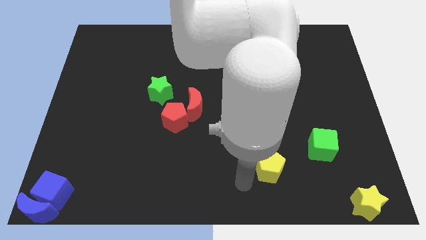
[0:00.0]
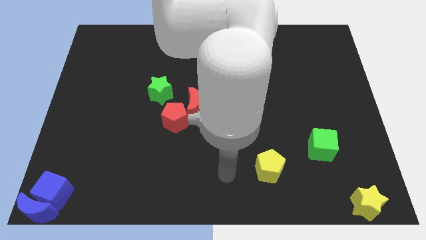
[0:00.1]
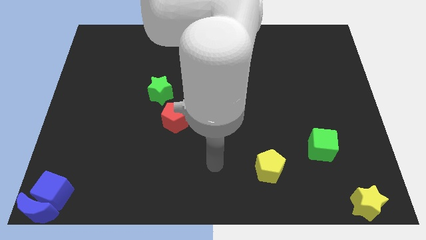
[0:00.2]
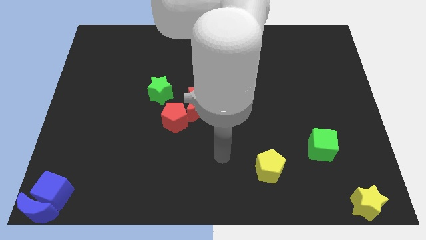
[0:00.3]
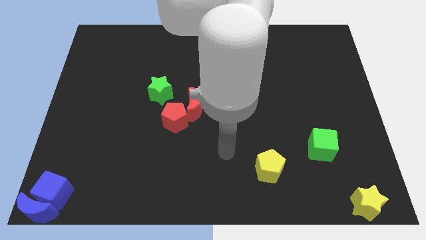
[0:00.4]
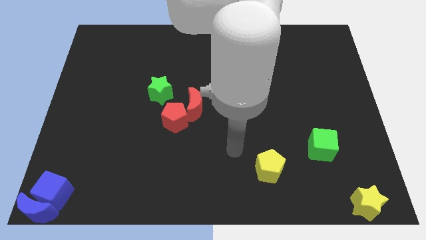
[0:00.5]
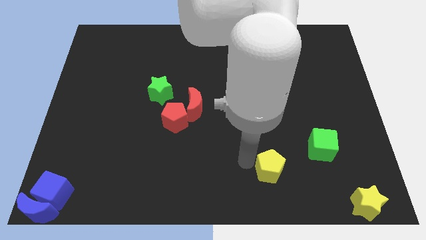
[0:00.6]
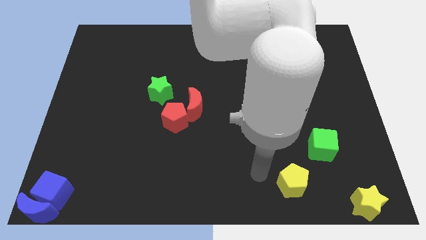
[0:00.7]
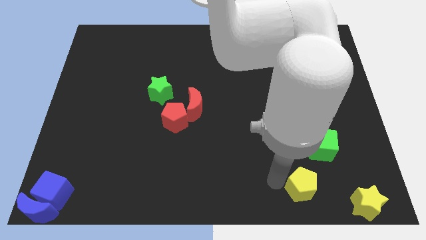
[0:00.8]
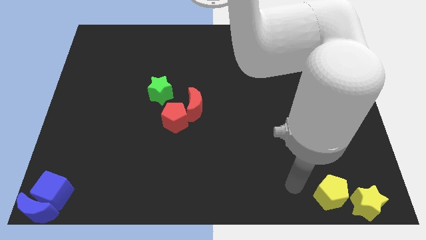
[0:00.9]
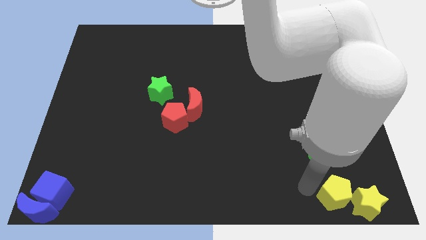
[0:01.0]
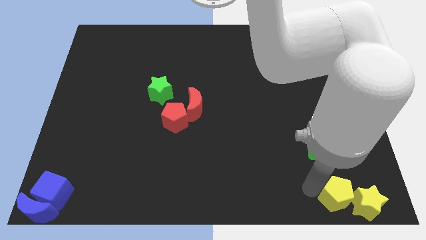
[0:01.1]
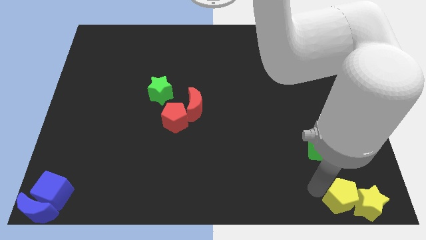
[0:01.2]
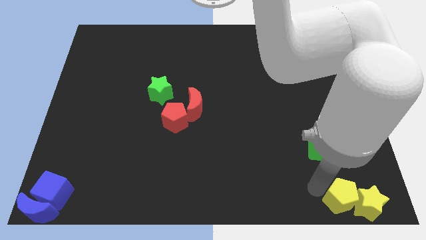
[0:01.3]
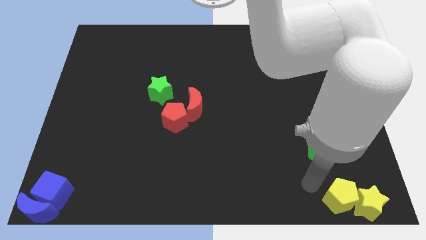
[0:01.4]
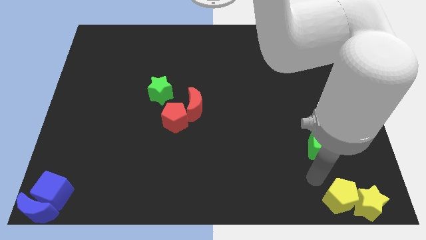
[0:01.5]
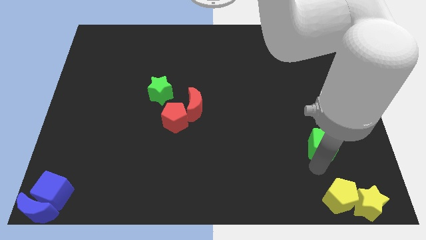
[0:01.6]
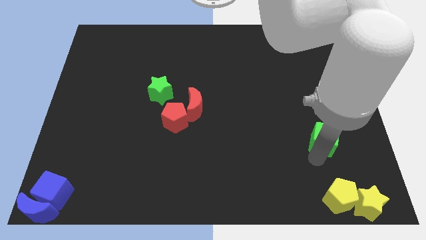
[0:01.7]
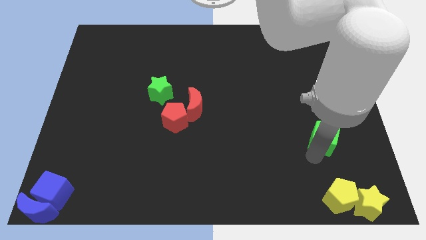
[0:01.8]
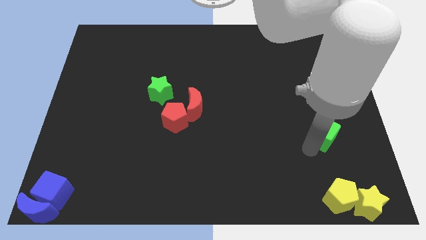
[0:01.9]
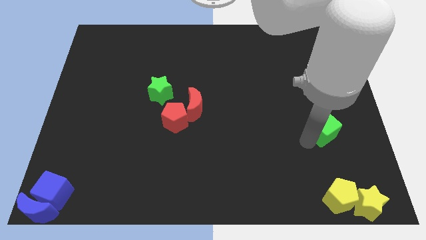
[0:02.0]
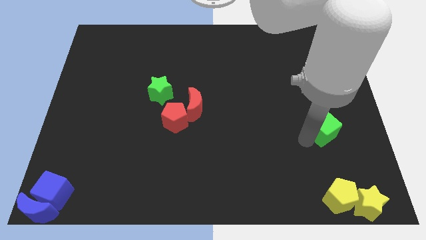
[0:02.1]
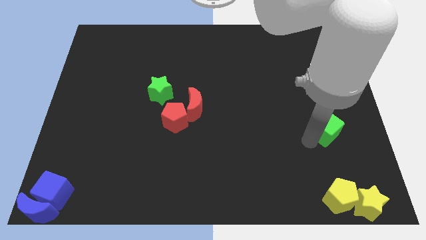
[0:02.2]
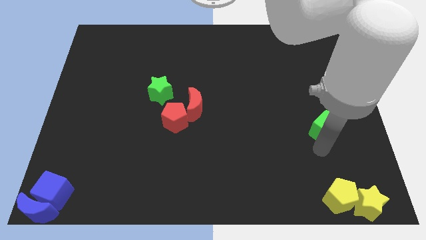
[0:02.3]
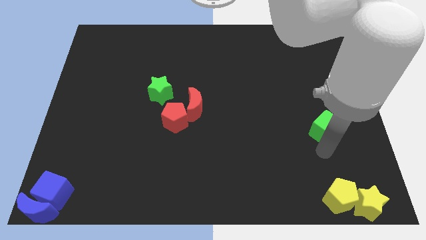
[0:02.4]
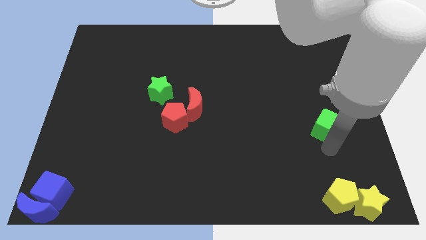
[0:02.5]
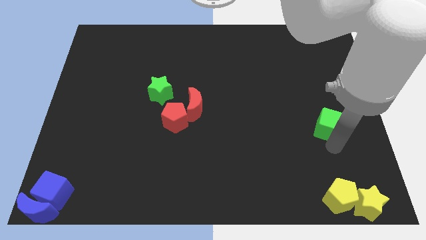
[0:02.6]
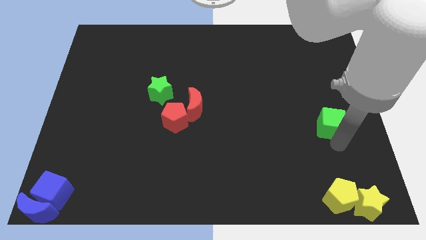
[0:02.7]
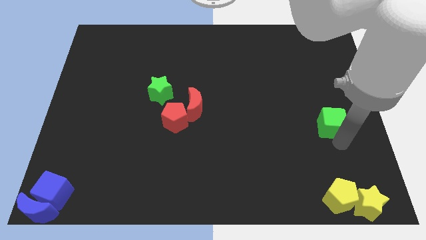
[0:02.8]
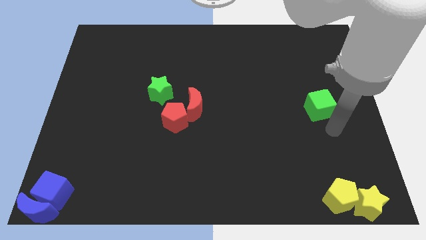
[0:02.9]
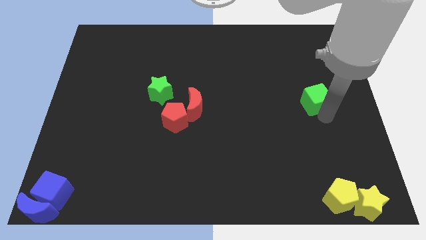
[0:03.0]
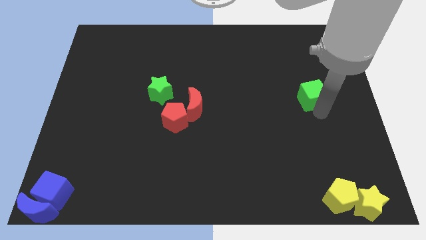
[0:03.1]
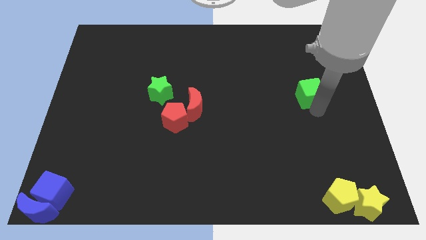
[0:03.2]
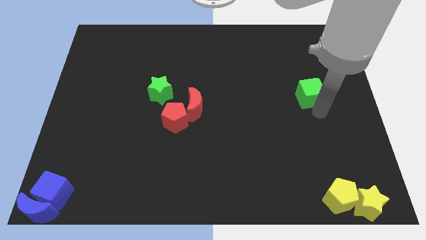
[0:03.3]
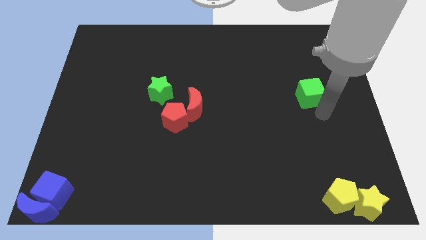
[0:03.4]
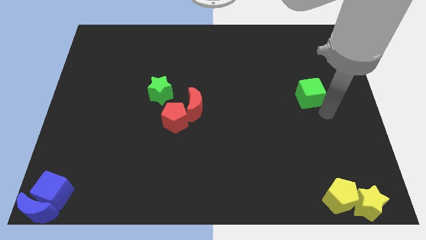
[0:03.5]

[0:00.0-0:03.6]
slightly push the green cube up

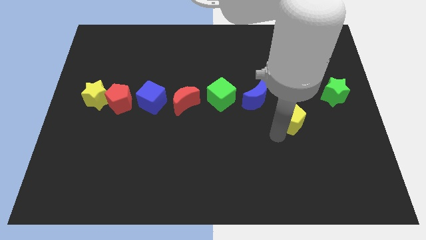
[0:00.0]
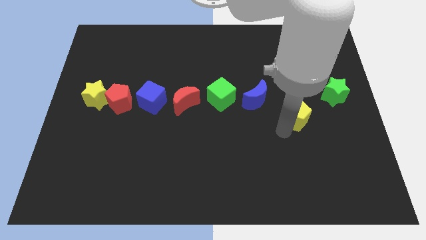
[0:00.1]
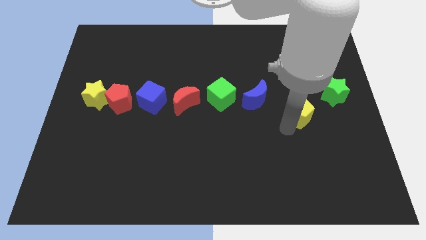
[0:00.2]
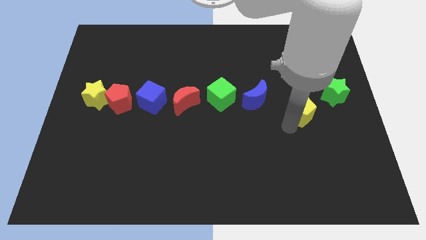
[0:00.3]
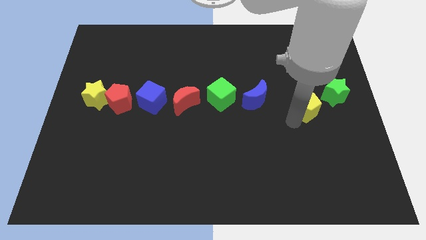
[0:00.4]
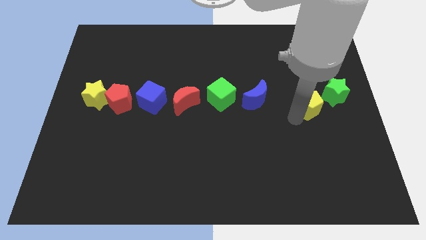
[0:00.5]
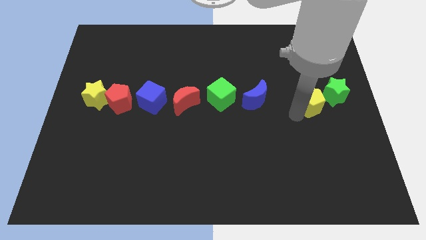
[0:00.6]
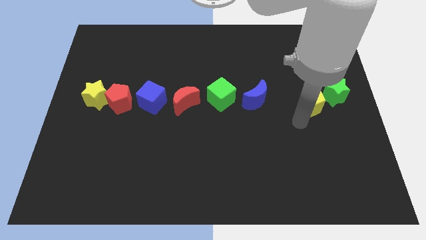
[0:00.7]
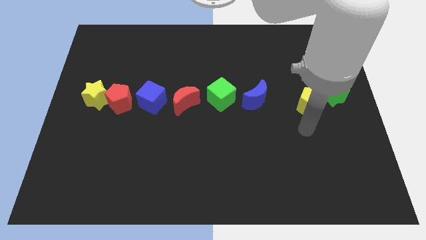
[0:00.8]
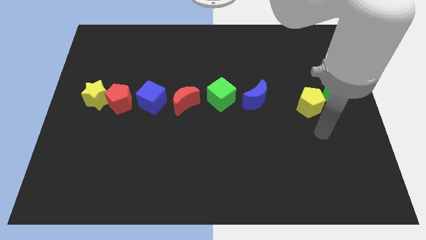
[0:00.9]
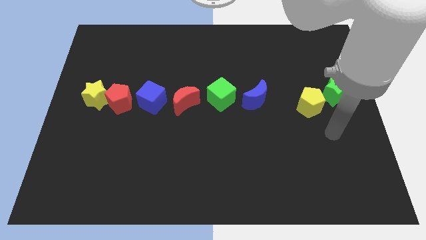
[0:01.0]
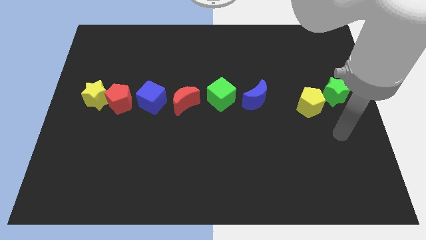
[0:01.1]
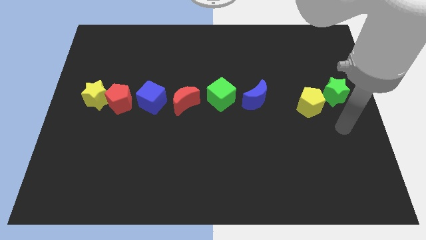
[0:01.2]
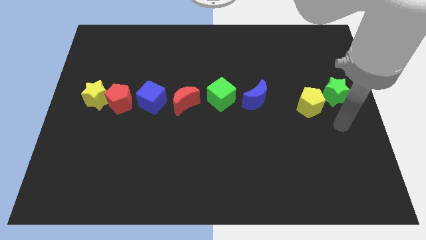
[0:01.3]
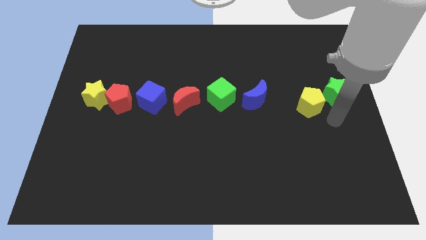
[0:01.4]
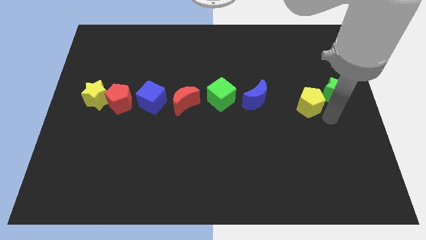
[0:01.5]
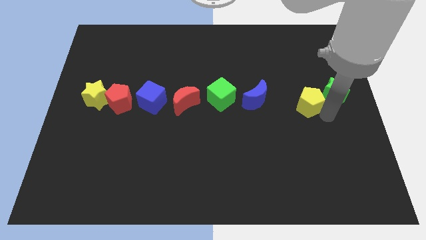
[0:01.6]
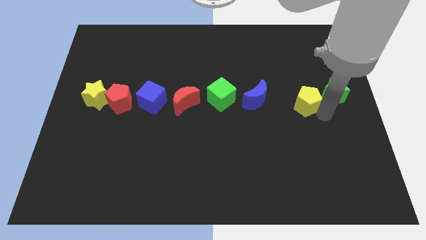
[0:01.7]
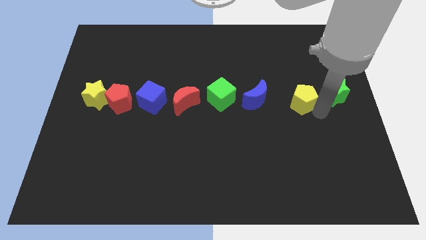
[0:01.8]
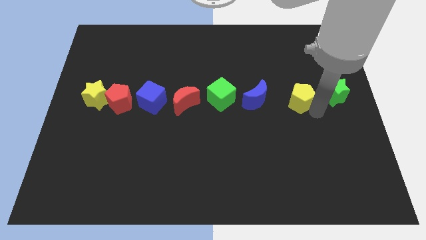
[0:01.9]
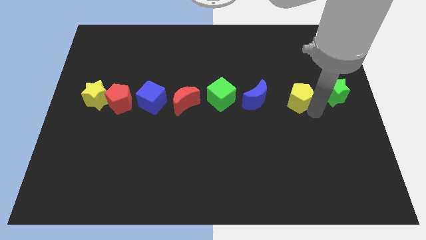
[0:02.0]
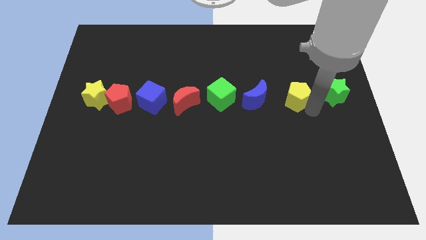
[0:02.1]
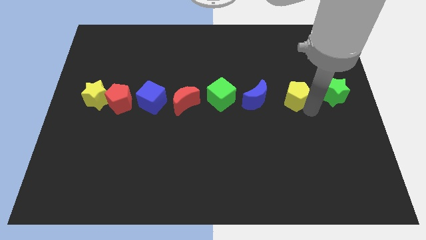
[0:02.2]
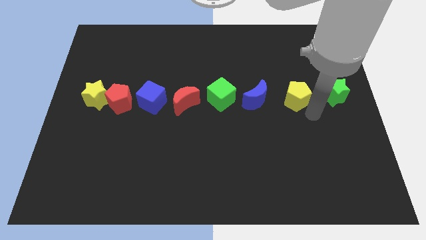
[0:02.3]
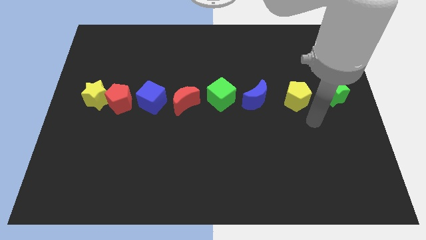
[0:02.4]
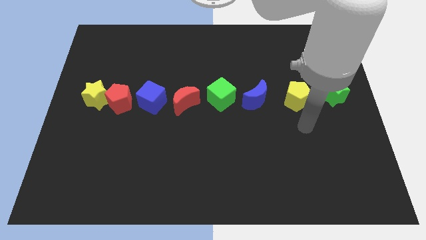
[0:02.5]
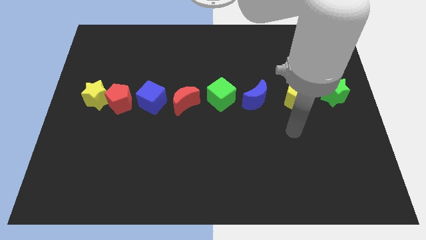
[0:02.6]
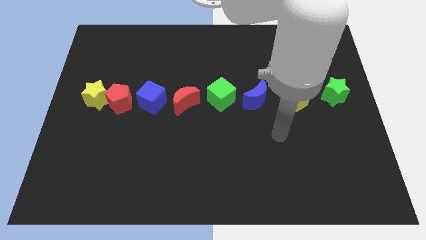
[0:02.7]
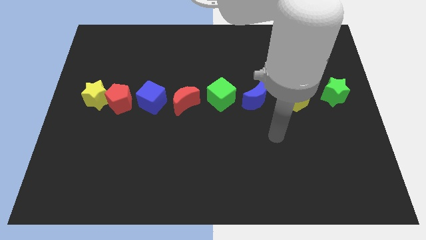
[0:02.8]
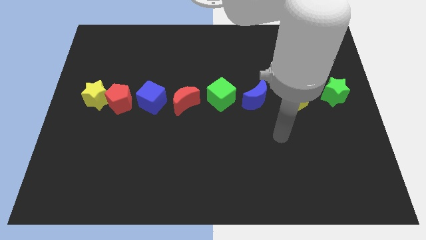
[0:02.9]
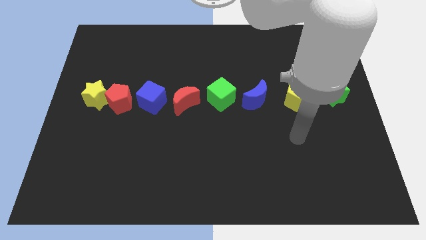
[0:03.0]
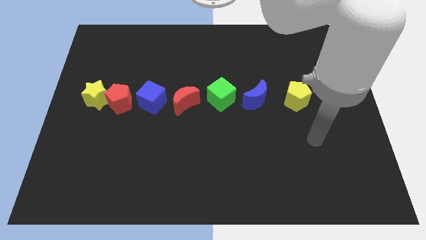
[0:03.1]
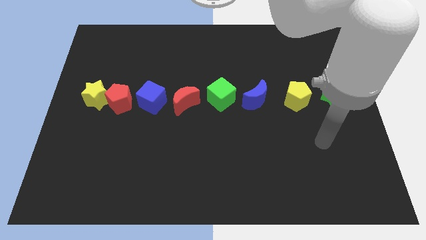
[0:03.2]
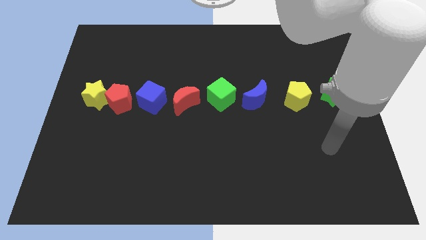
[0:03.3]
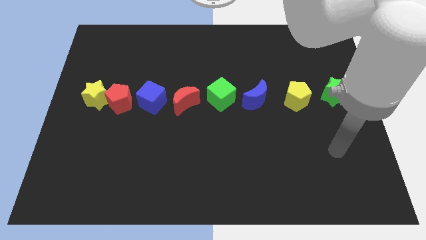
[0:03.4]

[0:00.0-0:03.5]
move your arm away from the yellow pentagon

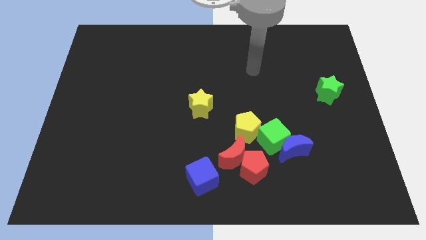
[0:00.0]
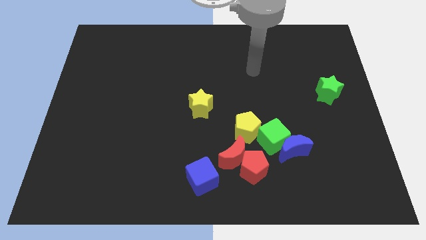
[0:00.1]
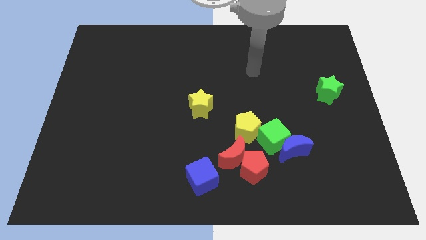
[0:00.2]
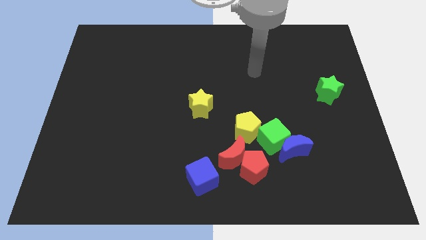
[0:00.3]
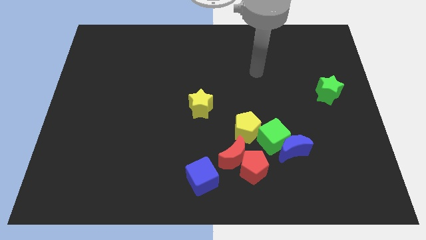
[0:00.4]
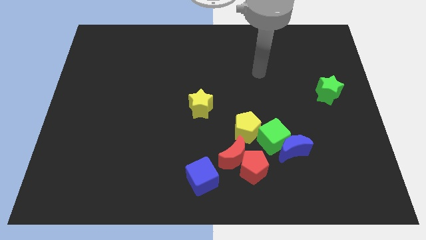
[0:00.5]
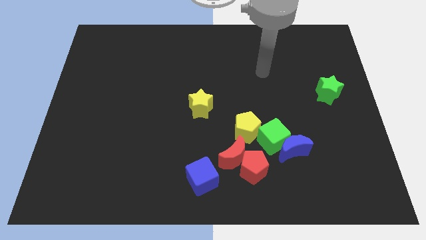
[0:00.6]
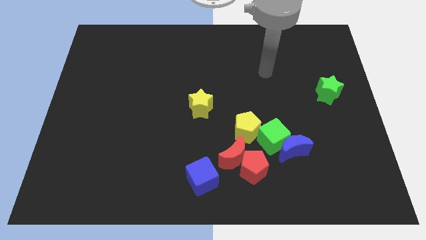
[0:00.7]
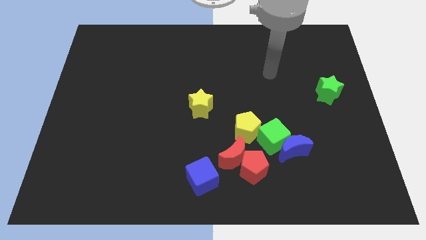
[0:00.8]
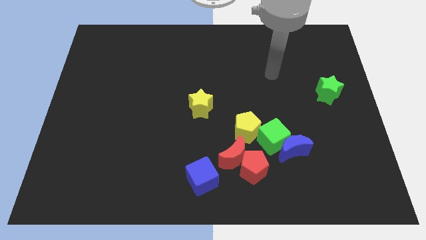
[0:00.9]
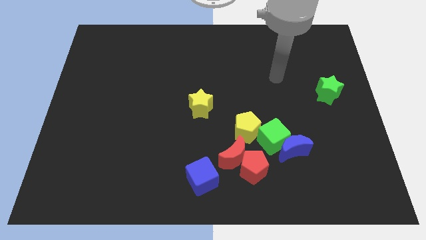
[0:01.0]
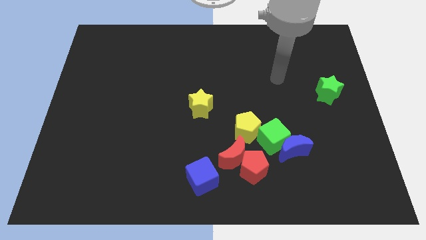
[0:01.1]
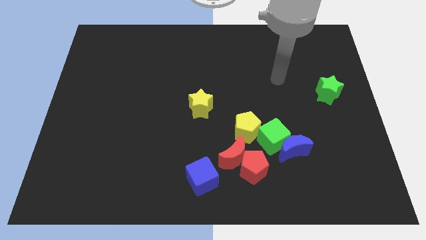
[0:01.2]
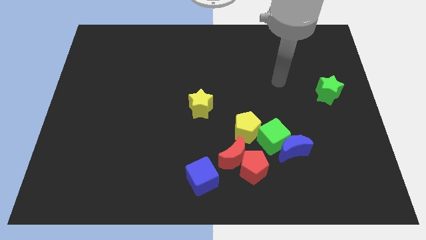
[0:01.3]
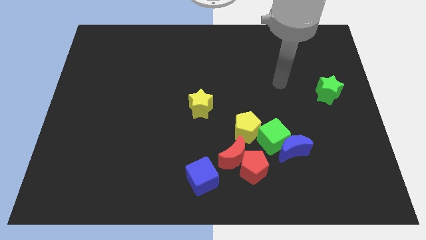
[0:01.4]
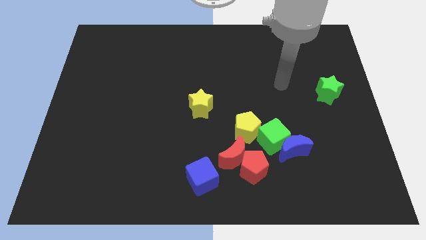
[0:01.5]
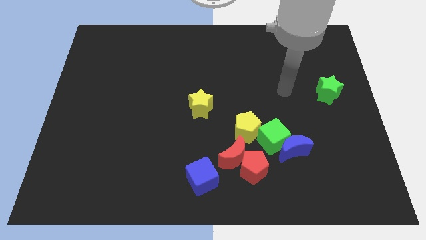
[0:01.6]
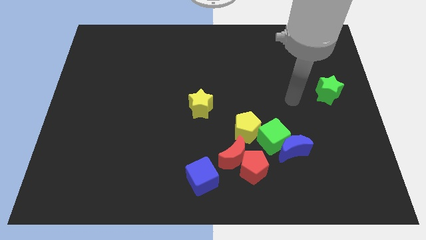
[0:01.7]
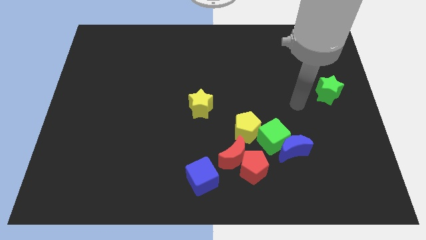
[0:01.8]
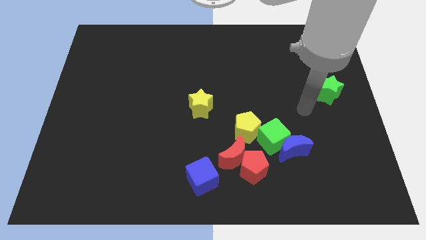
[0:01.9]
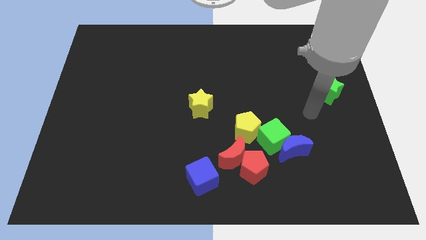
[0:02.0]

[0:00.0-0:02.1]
put your hand between the green star and green cube
